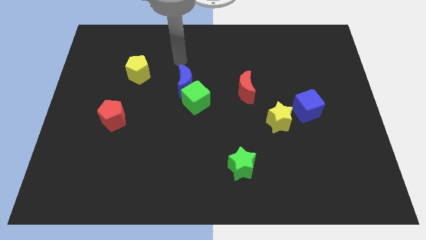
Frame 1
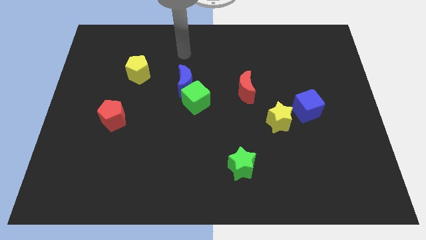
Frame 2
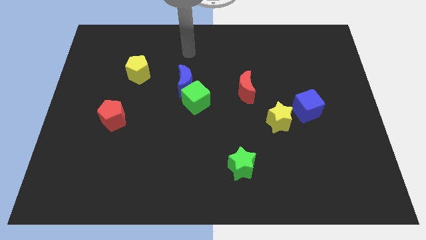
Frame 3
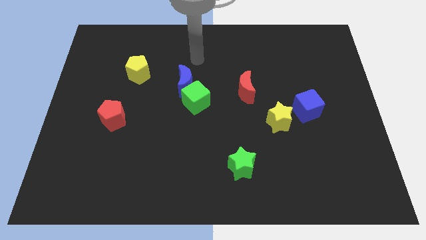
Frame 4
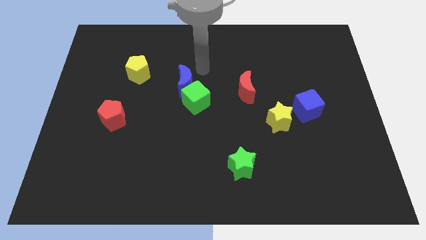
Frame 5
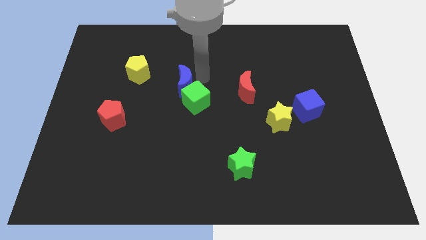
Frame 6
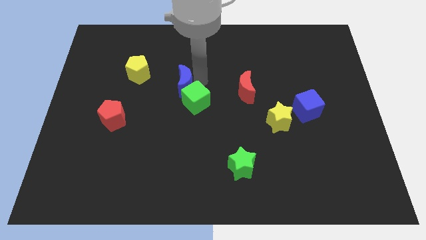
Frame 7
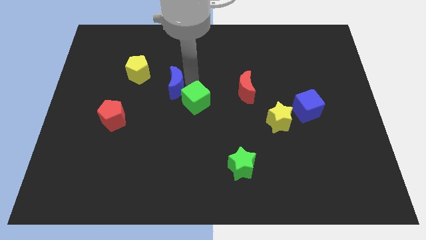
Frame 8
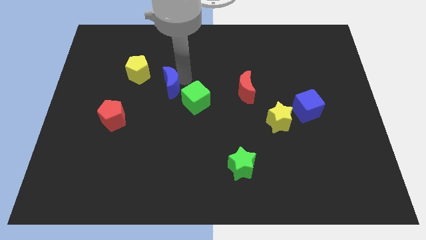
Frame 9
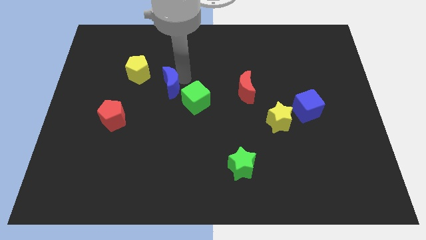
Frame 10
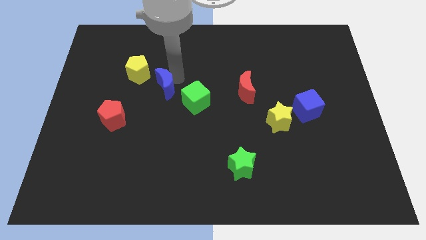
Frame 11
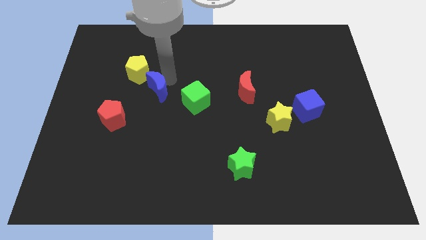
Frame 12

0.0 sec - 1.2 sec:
separate the blue crescent and green cube

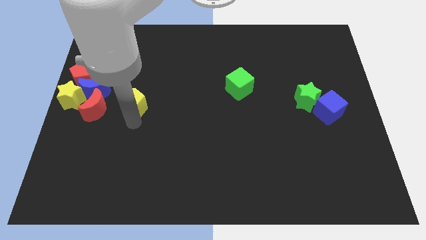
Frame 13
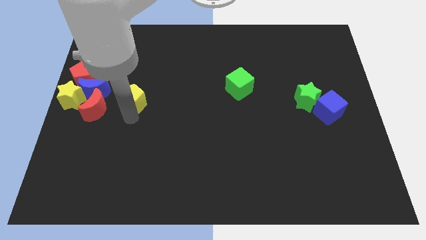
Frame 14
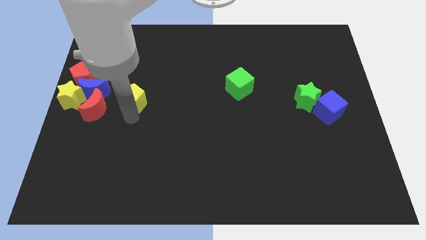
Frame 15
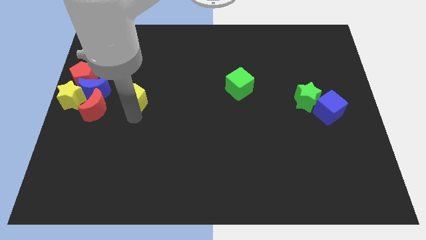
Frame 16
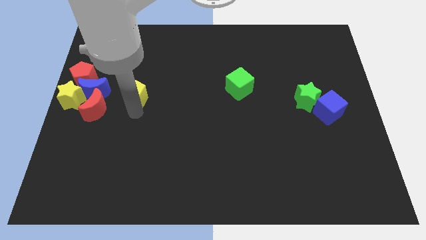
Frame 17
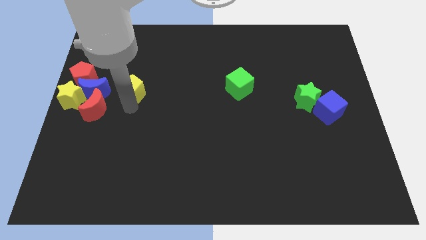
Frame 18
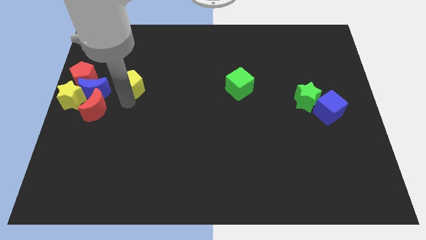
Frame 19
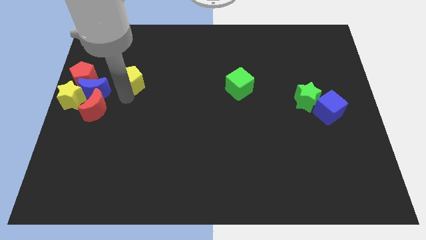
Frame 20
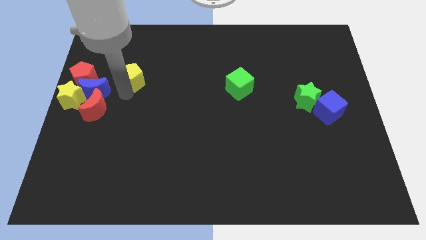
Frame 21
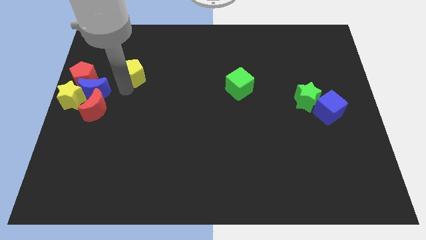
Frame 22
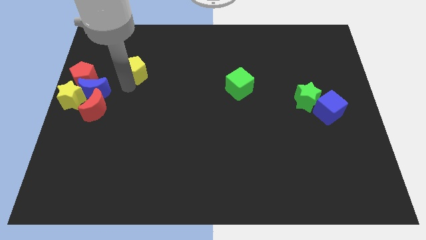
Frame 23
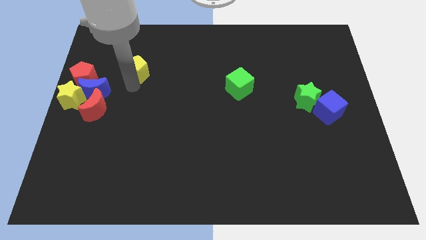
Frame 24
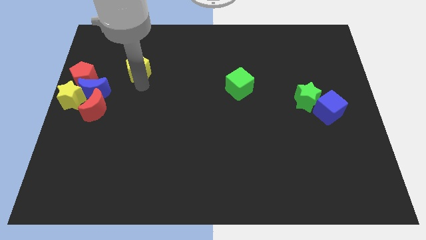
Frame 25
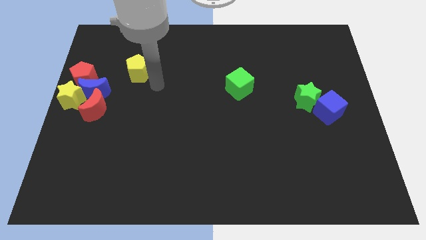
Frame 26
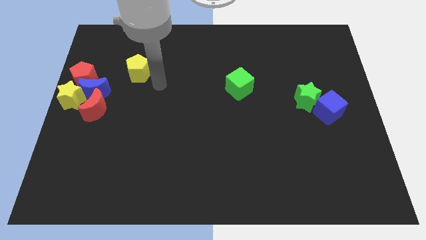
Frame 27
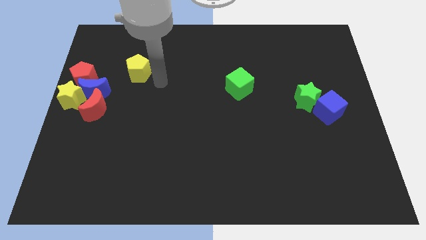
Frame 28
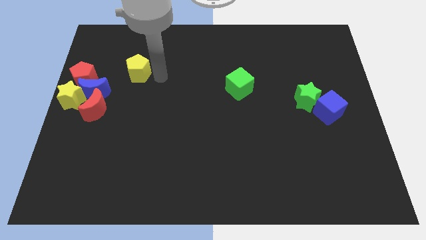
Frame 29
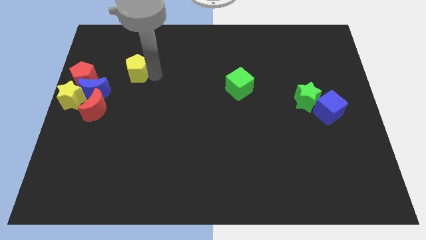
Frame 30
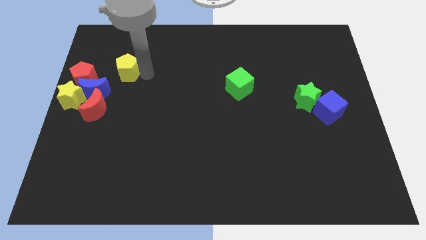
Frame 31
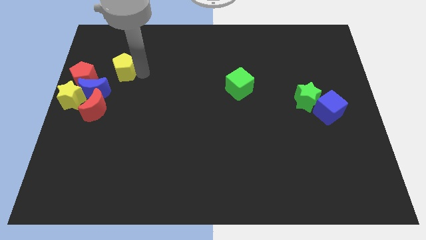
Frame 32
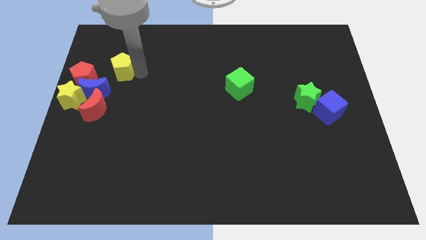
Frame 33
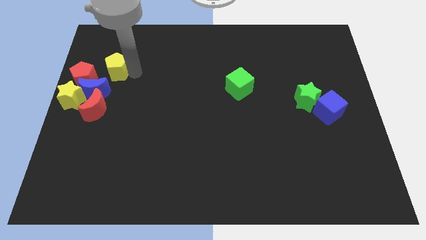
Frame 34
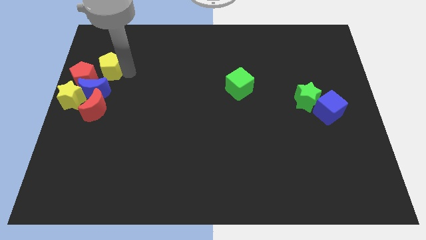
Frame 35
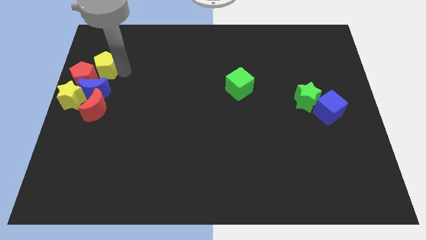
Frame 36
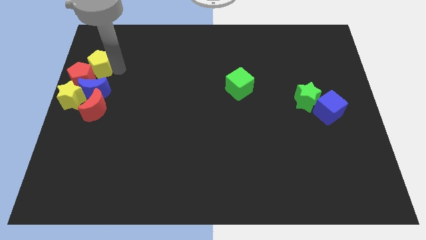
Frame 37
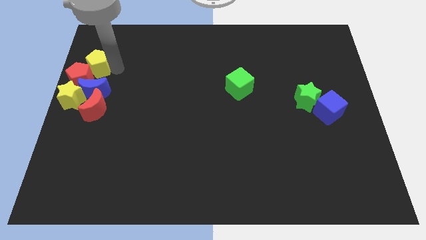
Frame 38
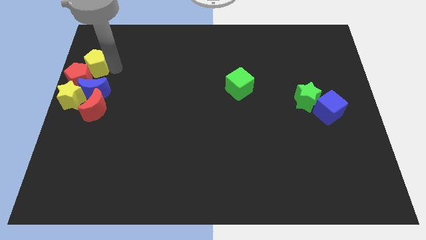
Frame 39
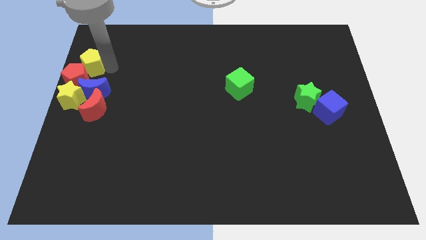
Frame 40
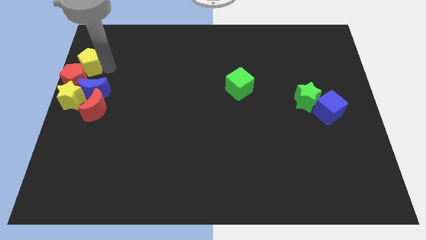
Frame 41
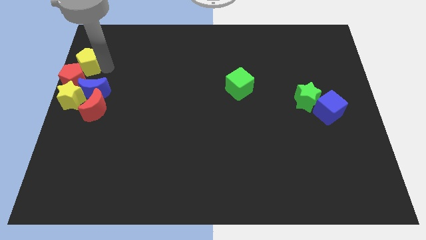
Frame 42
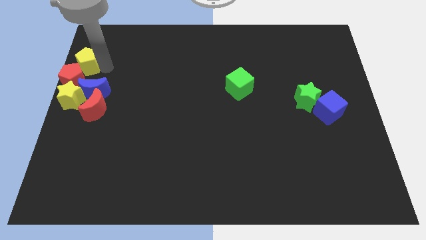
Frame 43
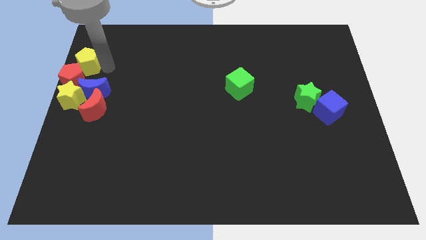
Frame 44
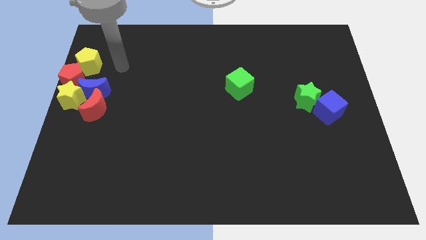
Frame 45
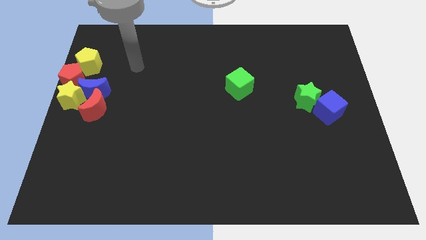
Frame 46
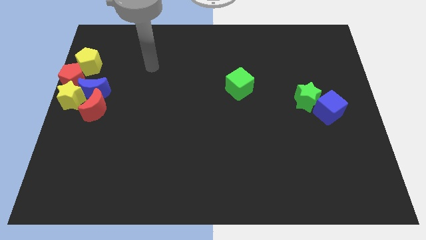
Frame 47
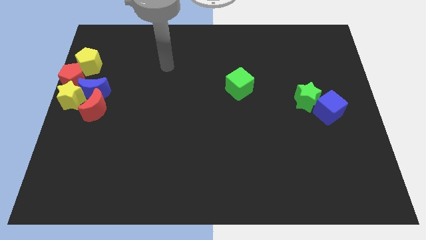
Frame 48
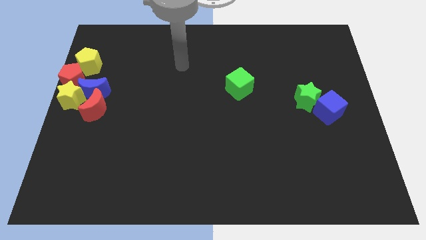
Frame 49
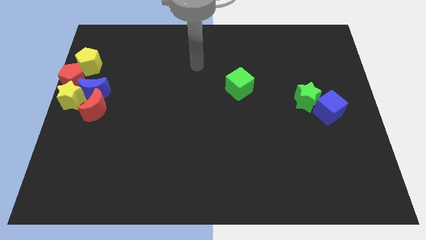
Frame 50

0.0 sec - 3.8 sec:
push the yellow pentagon into the red pentagon

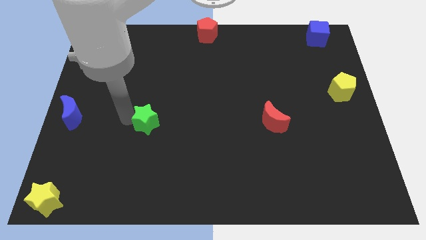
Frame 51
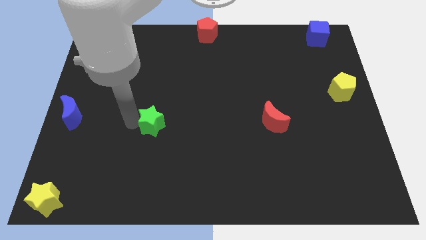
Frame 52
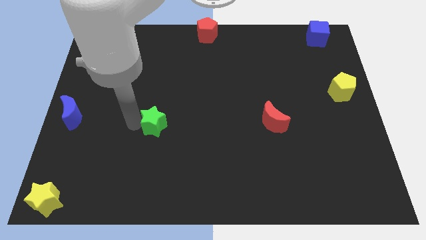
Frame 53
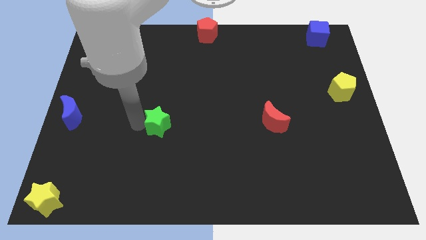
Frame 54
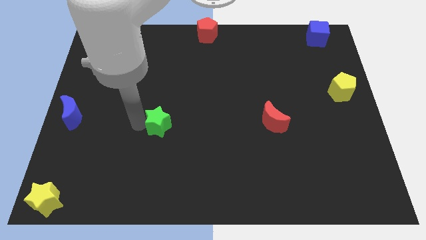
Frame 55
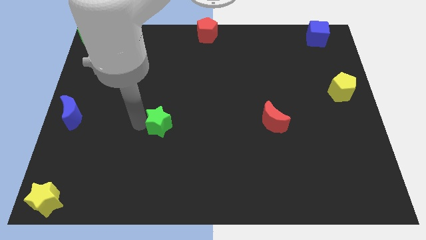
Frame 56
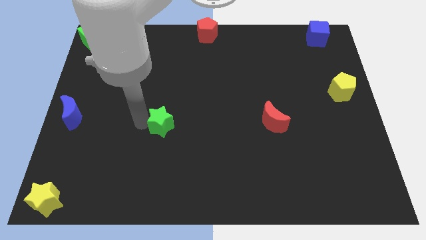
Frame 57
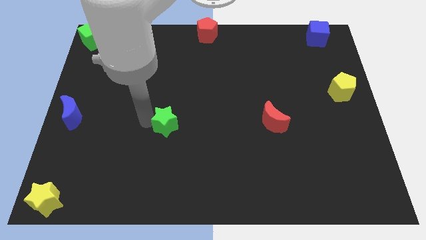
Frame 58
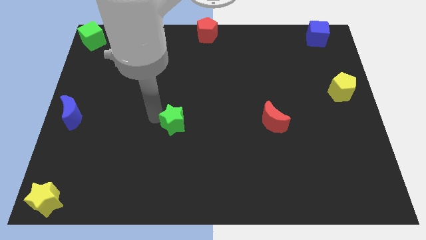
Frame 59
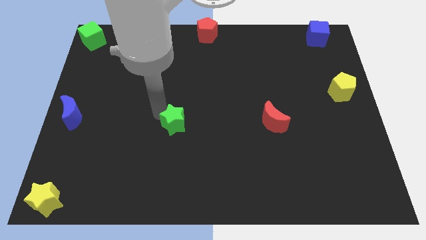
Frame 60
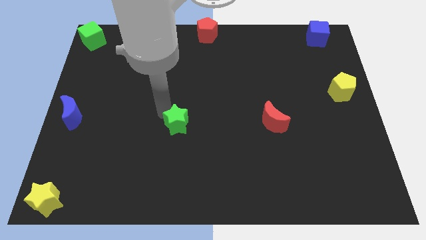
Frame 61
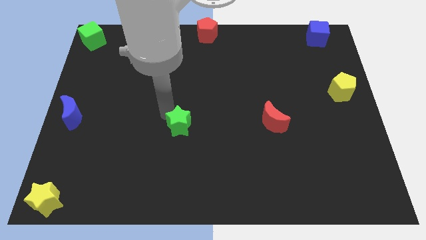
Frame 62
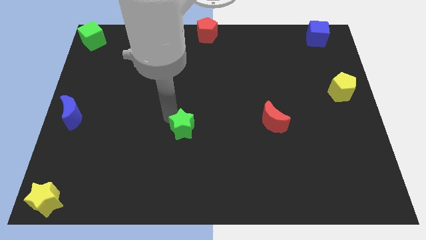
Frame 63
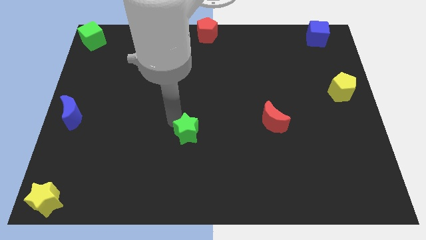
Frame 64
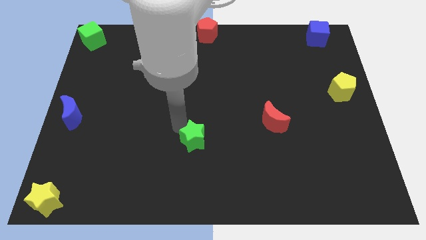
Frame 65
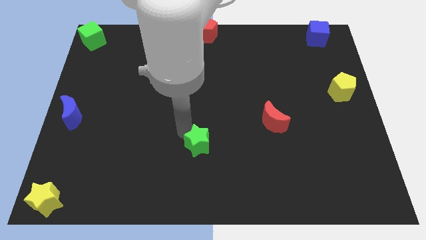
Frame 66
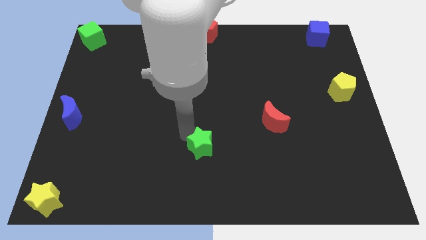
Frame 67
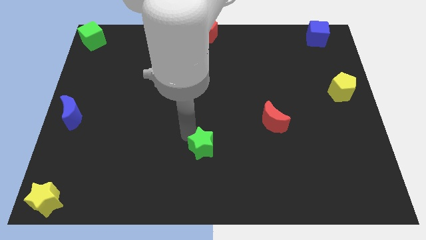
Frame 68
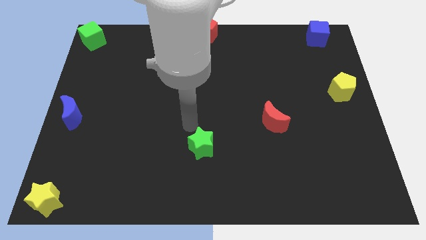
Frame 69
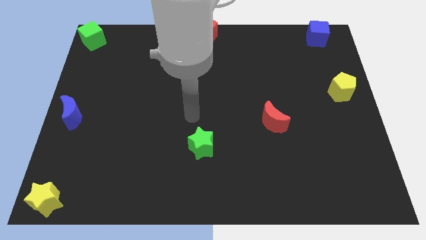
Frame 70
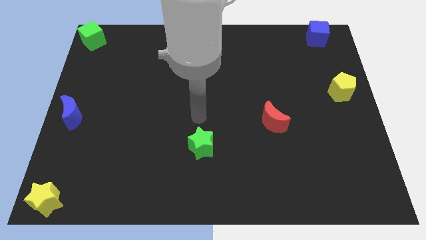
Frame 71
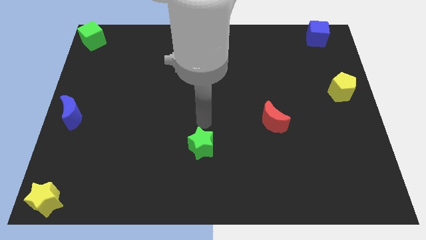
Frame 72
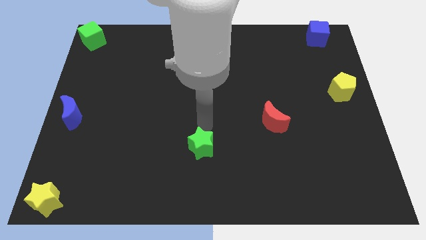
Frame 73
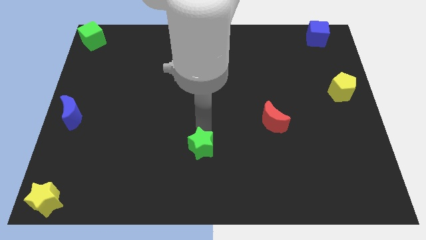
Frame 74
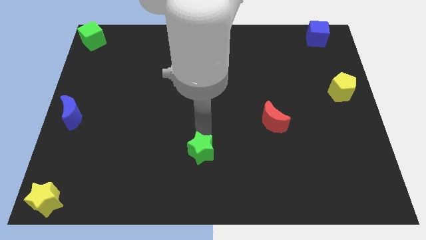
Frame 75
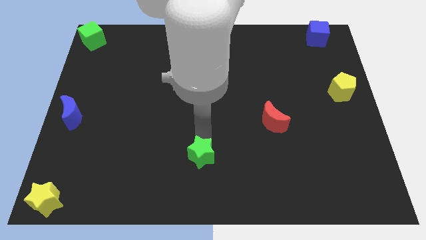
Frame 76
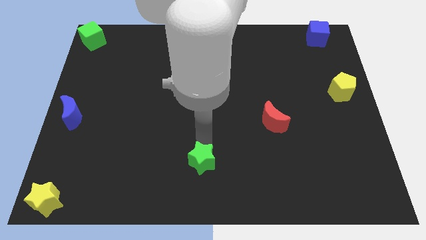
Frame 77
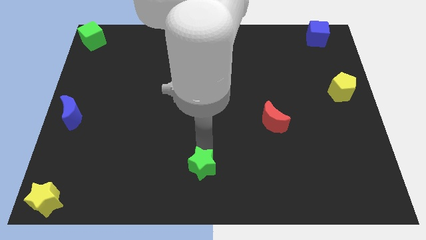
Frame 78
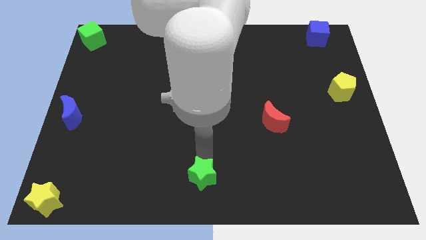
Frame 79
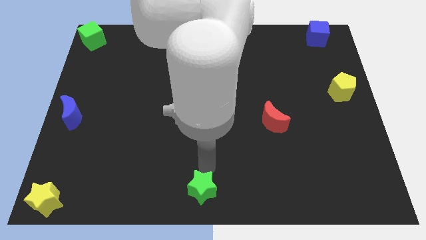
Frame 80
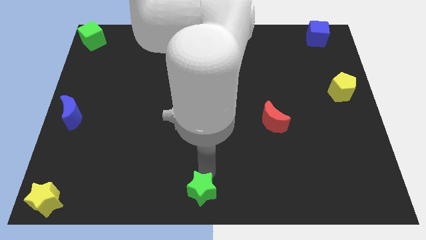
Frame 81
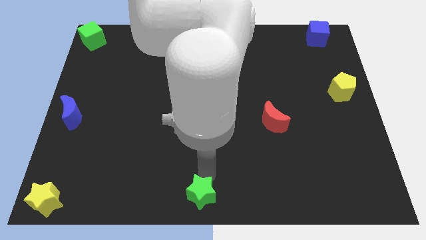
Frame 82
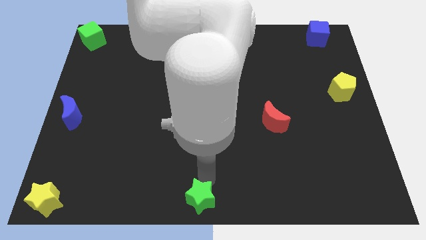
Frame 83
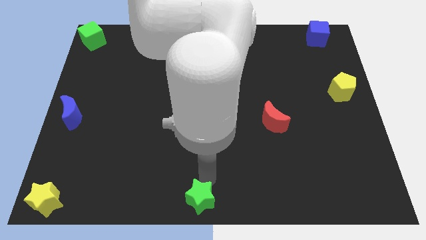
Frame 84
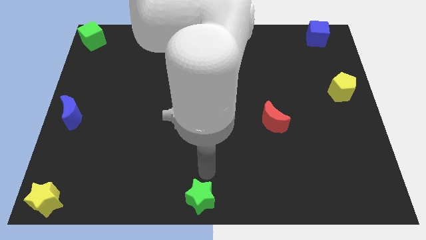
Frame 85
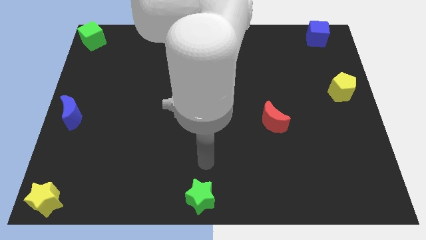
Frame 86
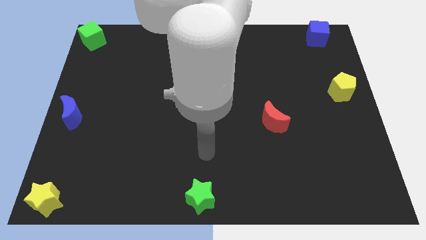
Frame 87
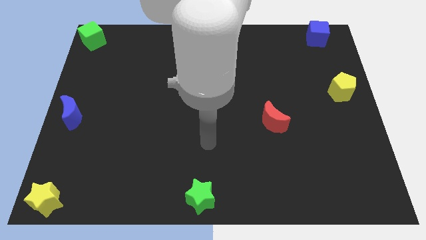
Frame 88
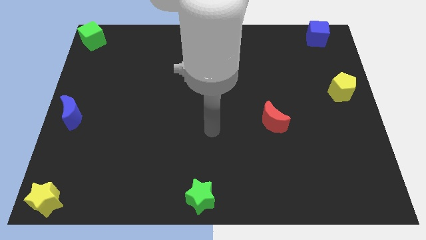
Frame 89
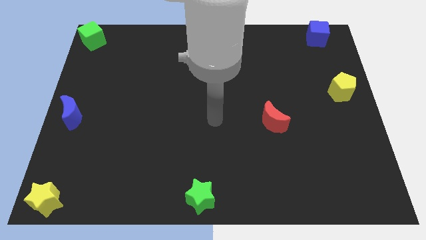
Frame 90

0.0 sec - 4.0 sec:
move the green star to the bottom center of the board
